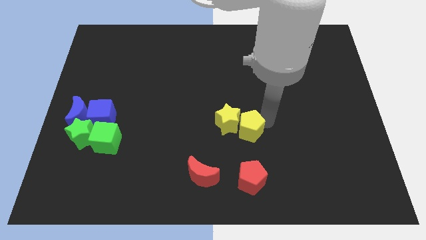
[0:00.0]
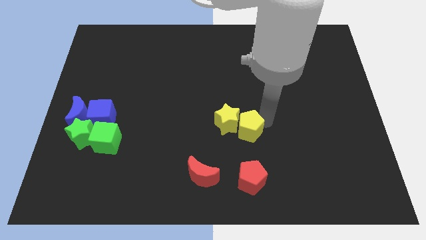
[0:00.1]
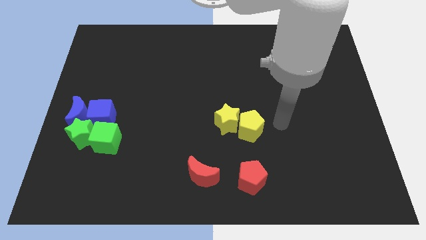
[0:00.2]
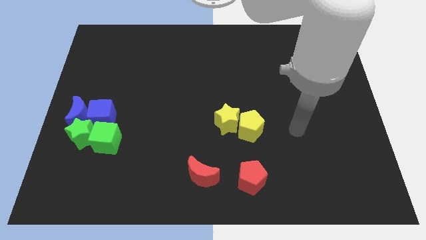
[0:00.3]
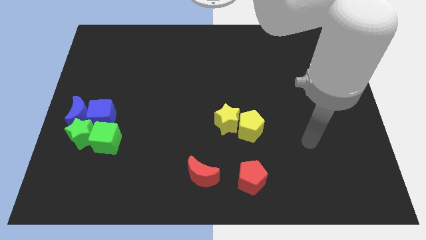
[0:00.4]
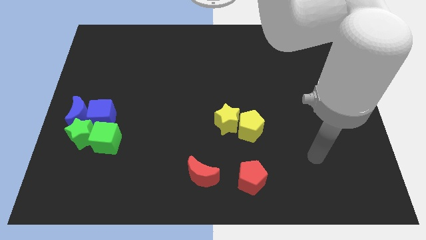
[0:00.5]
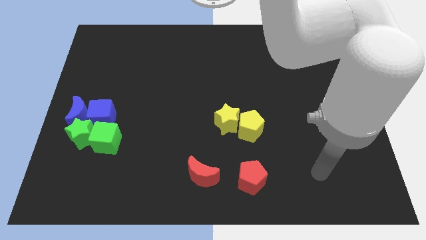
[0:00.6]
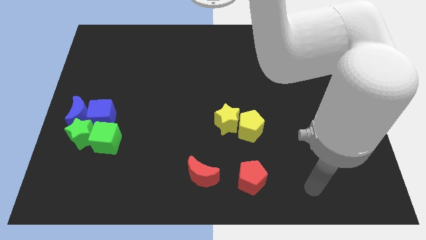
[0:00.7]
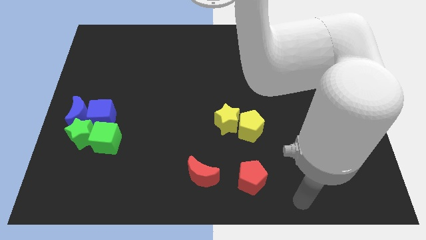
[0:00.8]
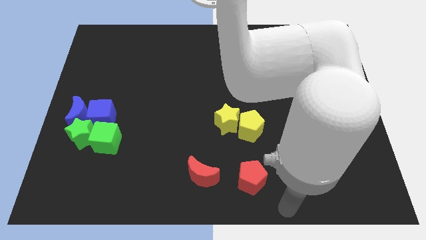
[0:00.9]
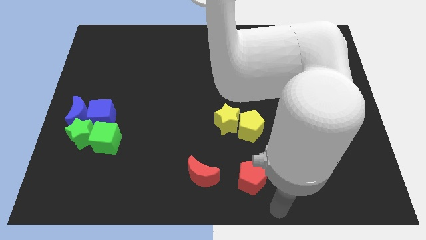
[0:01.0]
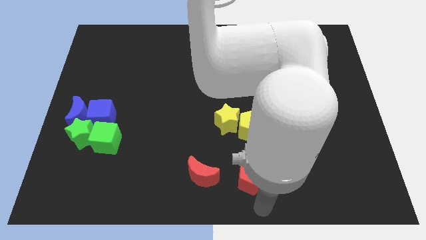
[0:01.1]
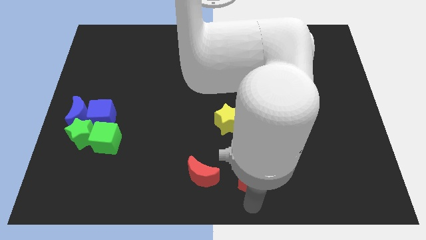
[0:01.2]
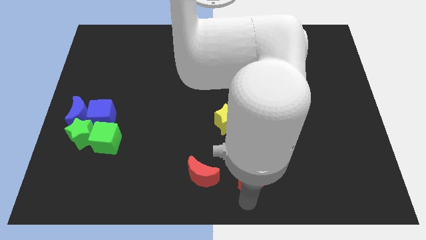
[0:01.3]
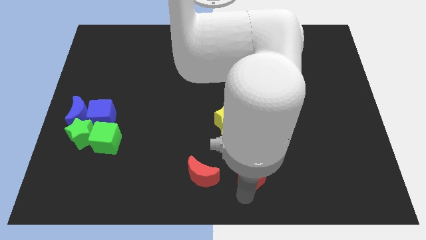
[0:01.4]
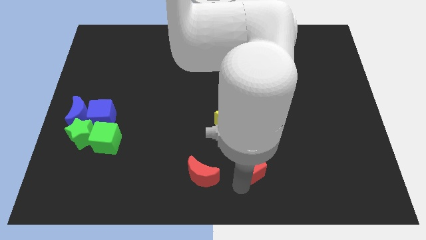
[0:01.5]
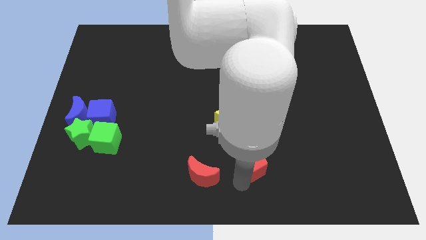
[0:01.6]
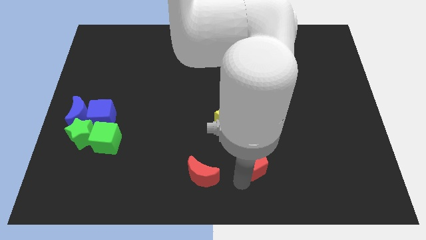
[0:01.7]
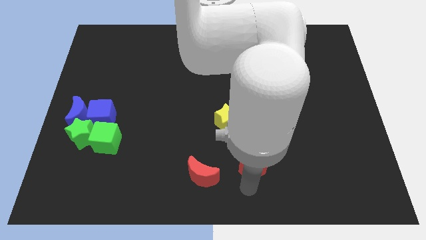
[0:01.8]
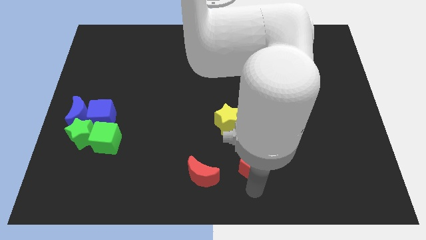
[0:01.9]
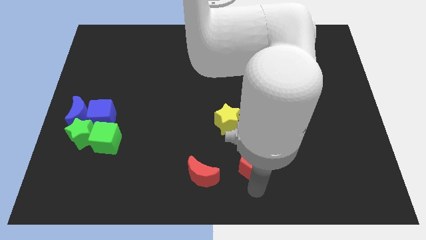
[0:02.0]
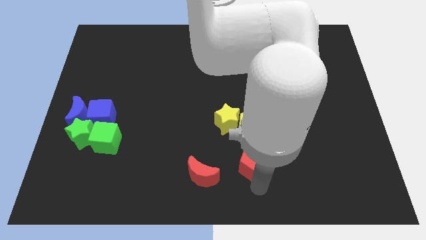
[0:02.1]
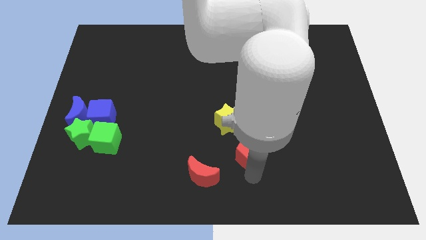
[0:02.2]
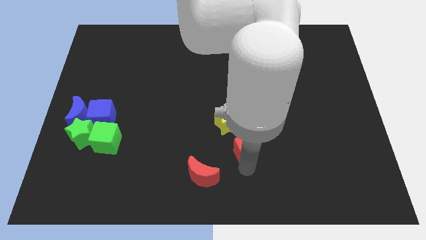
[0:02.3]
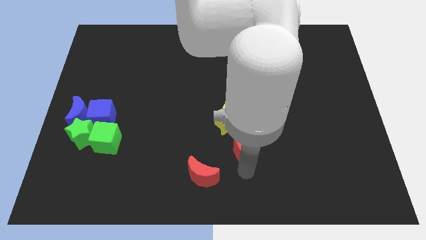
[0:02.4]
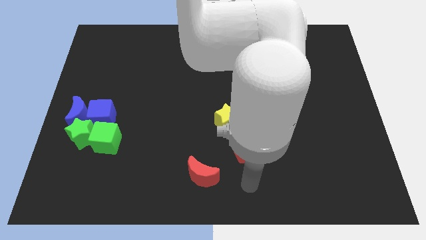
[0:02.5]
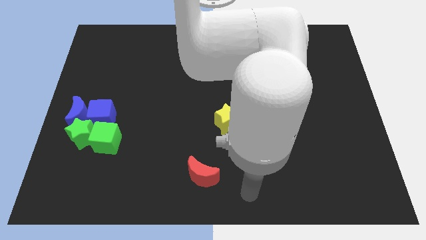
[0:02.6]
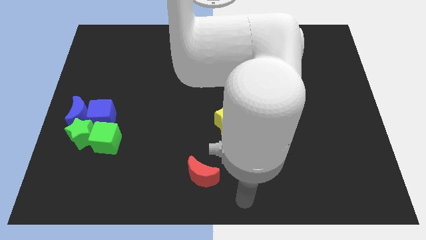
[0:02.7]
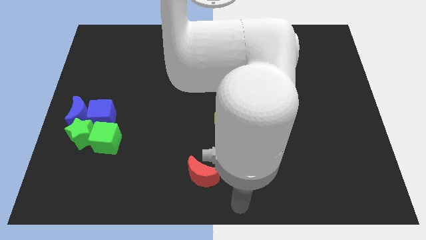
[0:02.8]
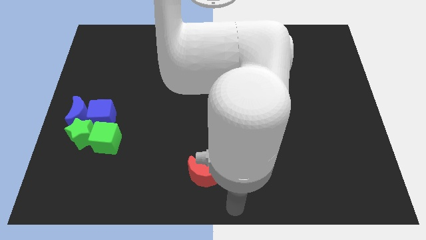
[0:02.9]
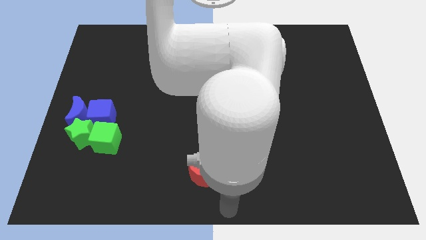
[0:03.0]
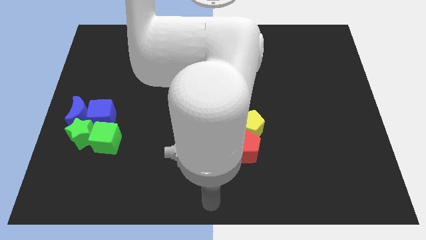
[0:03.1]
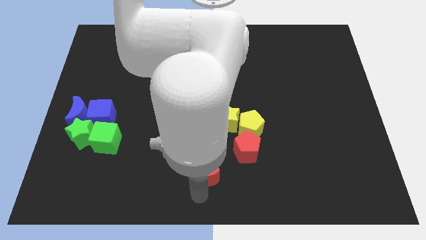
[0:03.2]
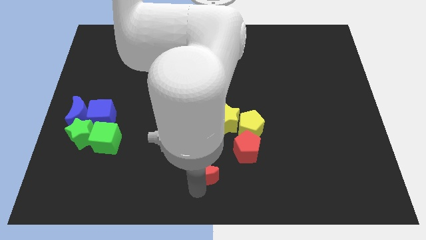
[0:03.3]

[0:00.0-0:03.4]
move the red pentagon below the yellow pentagon

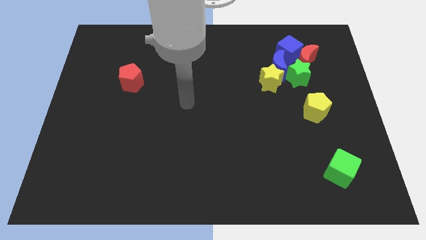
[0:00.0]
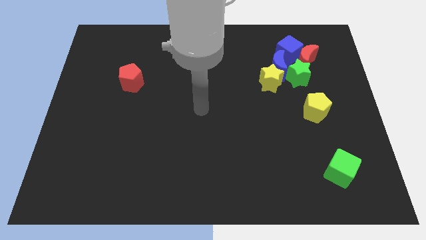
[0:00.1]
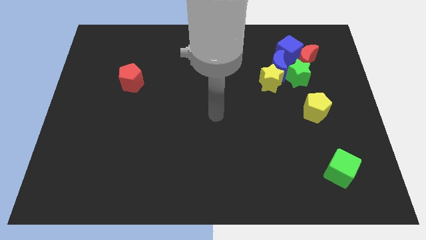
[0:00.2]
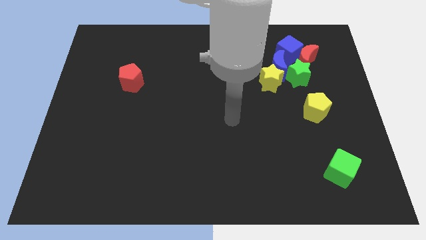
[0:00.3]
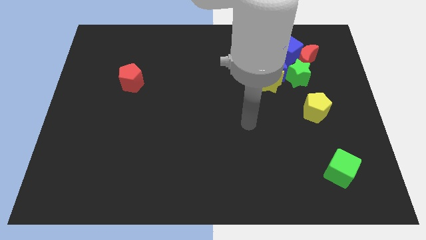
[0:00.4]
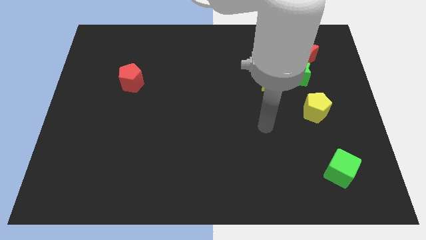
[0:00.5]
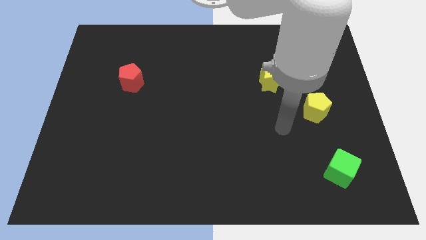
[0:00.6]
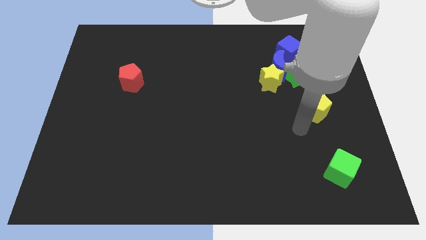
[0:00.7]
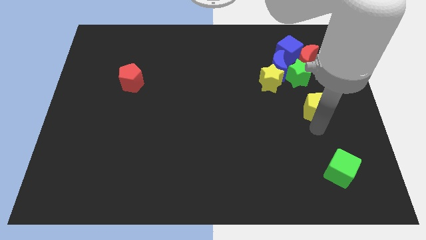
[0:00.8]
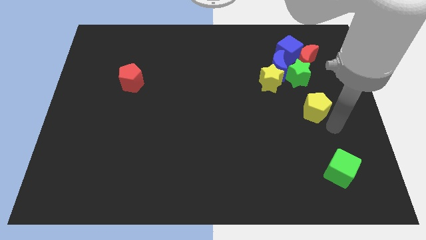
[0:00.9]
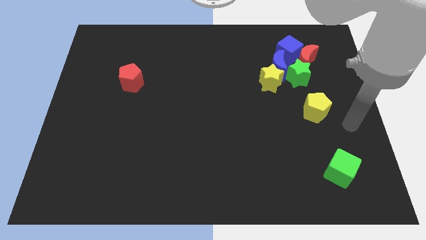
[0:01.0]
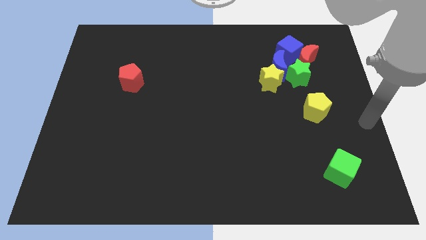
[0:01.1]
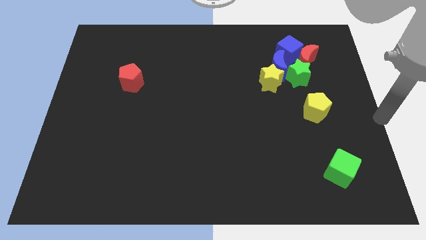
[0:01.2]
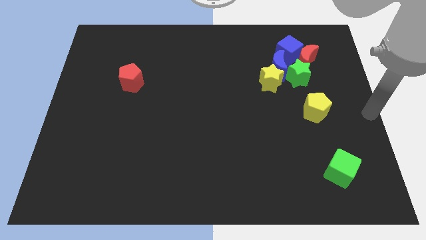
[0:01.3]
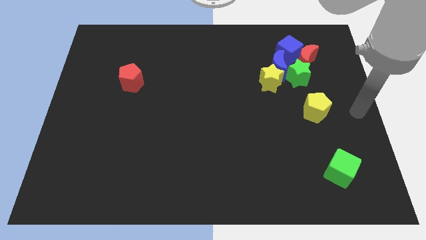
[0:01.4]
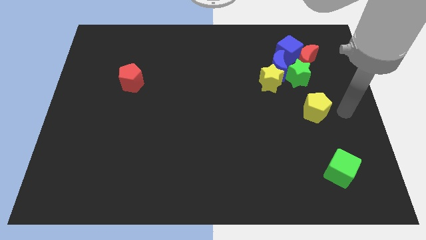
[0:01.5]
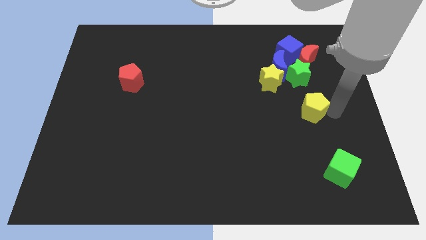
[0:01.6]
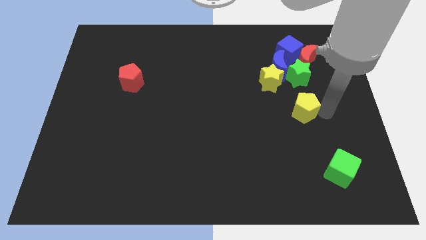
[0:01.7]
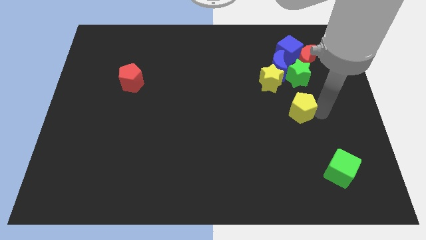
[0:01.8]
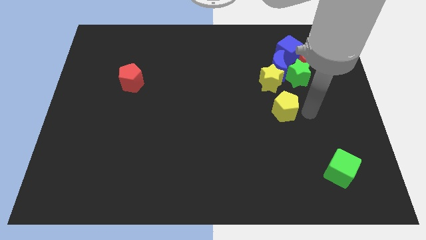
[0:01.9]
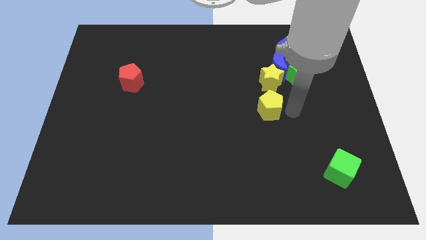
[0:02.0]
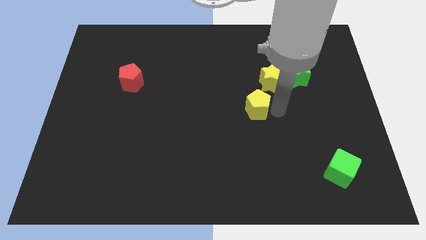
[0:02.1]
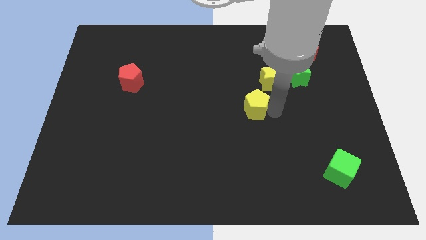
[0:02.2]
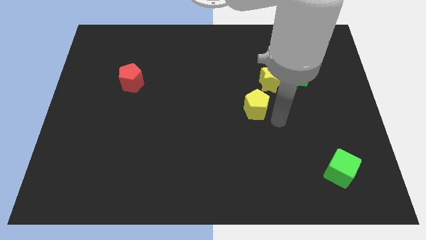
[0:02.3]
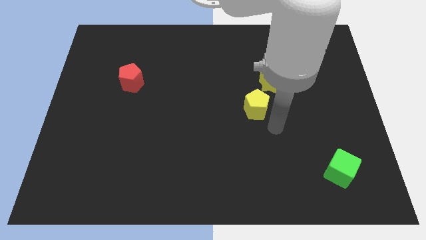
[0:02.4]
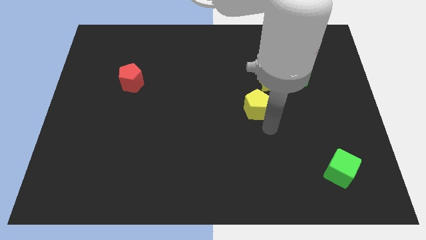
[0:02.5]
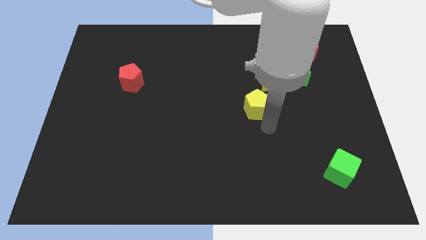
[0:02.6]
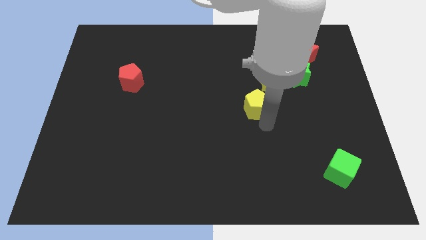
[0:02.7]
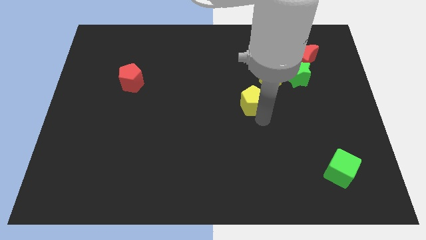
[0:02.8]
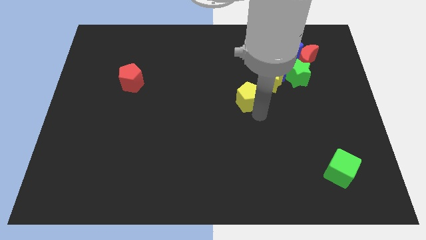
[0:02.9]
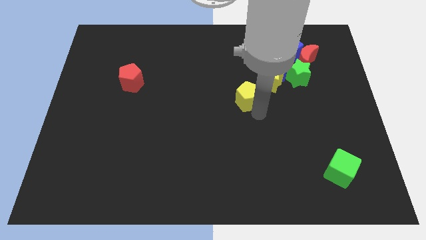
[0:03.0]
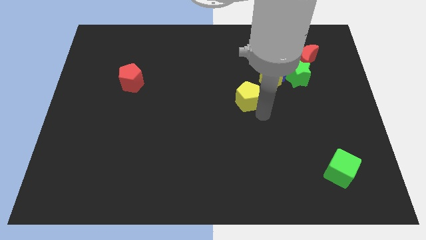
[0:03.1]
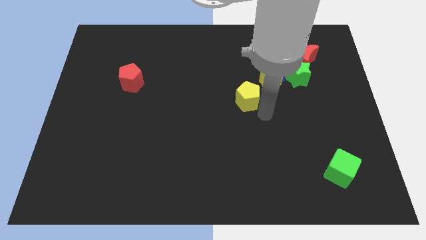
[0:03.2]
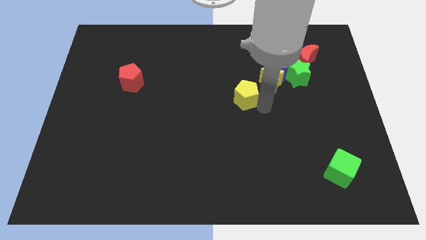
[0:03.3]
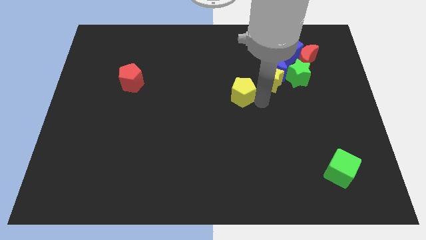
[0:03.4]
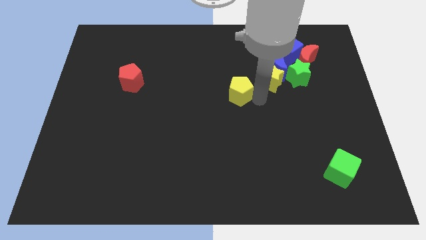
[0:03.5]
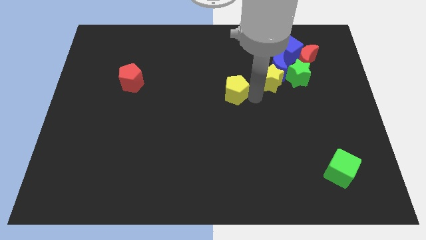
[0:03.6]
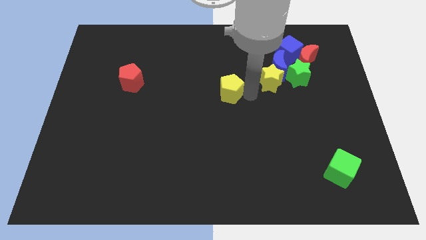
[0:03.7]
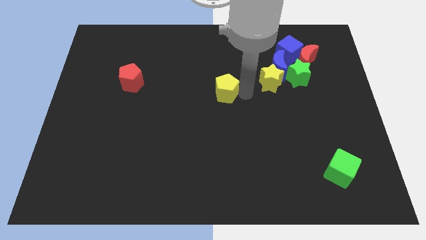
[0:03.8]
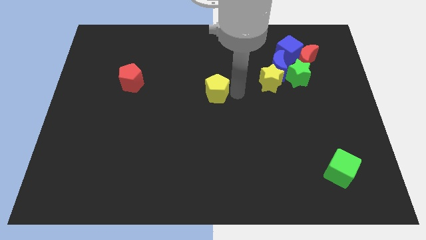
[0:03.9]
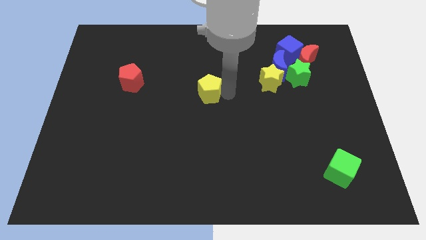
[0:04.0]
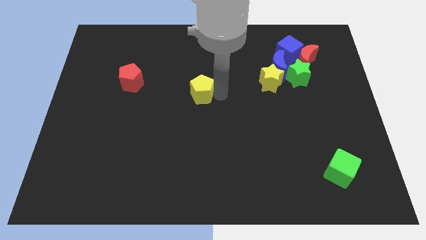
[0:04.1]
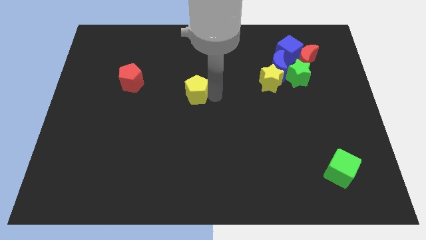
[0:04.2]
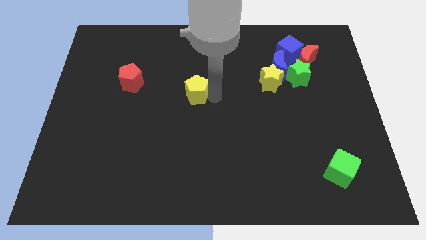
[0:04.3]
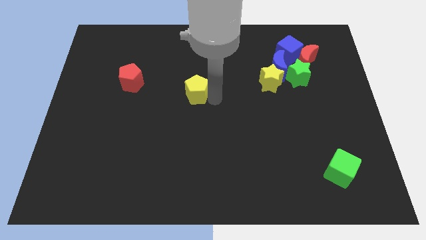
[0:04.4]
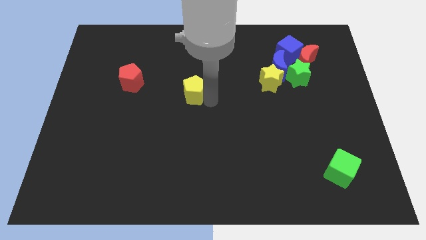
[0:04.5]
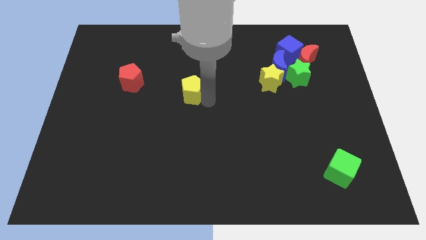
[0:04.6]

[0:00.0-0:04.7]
place the yellow pentagon at the center of the board

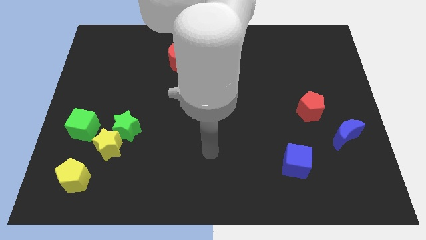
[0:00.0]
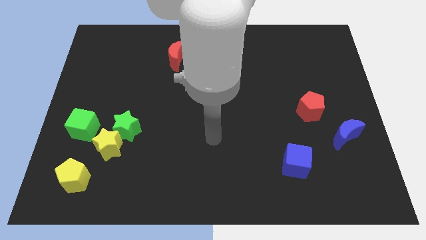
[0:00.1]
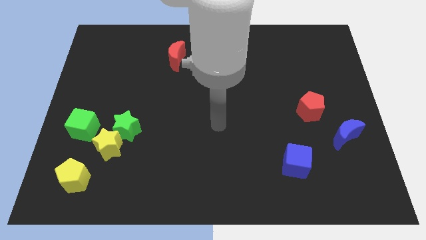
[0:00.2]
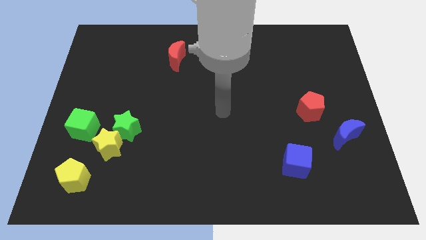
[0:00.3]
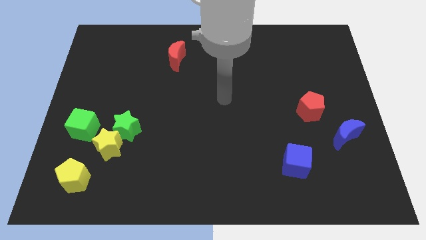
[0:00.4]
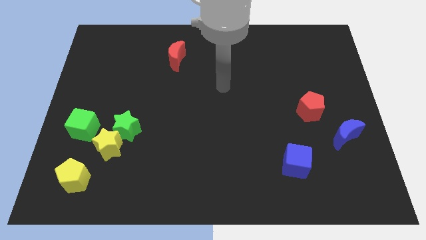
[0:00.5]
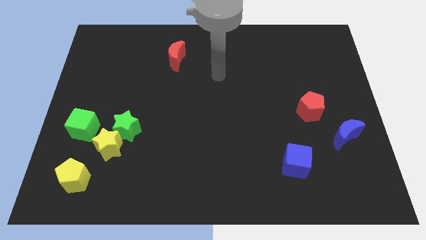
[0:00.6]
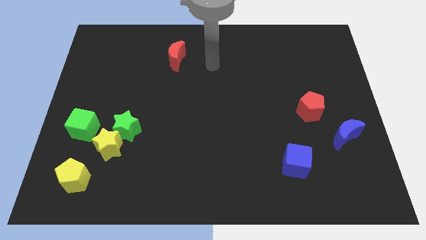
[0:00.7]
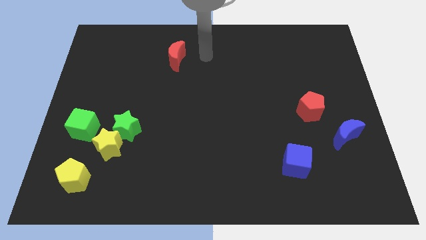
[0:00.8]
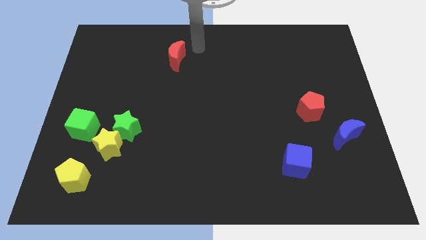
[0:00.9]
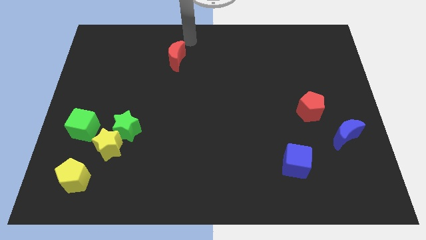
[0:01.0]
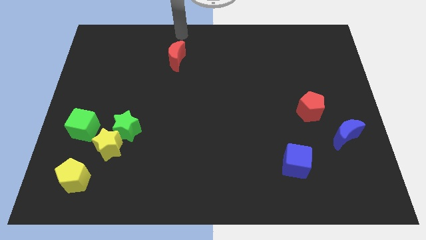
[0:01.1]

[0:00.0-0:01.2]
point your arm above the red moon
